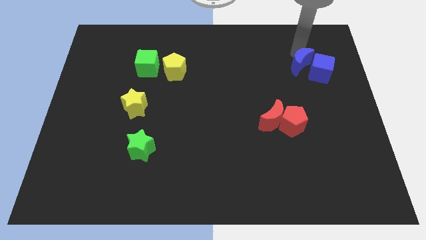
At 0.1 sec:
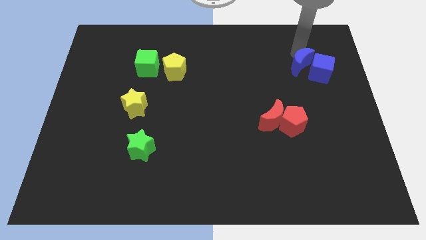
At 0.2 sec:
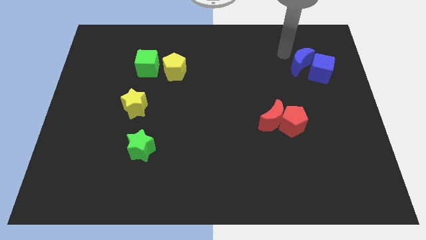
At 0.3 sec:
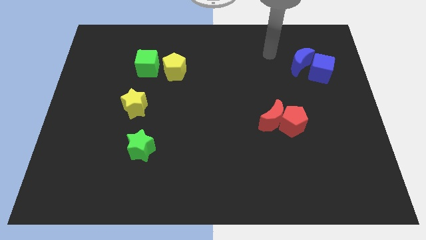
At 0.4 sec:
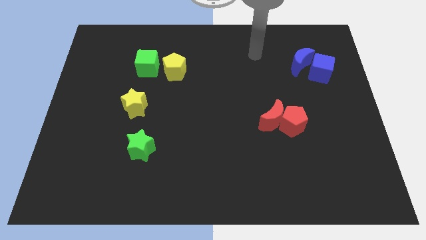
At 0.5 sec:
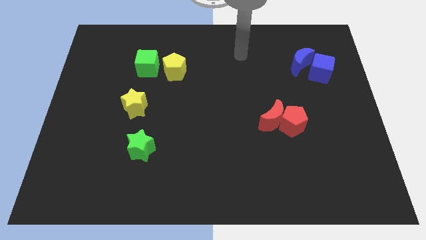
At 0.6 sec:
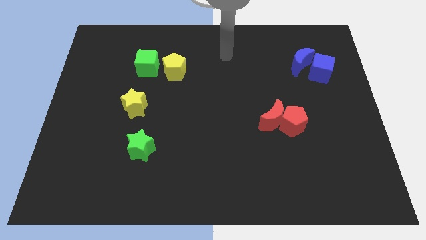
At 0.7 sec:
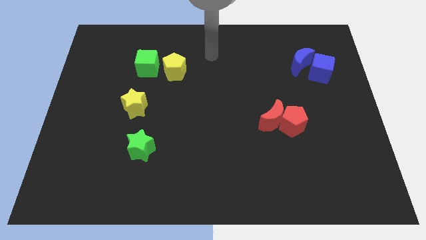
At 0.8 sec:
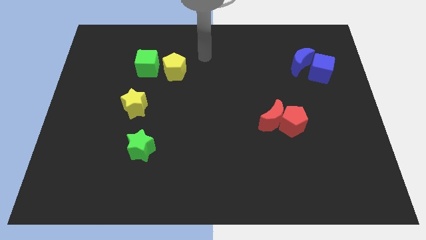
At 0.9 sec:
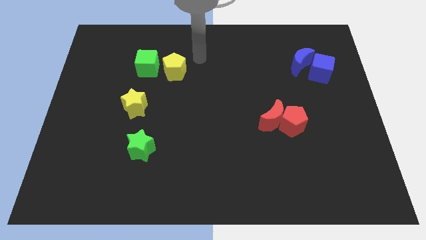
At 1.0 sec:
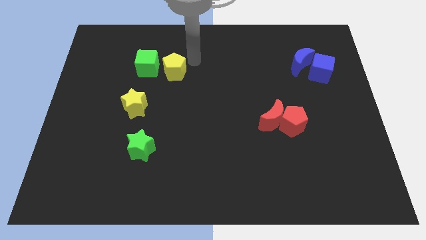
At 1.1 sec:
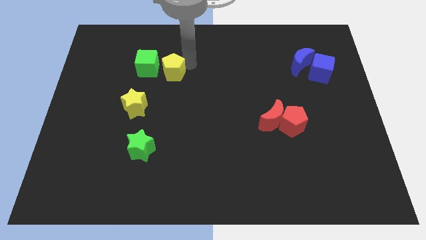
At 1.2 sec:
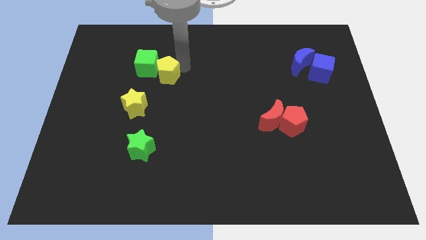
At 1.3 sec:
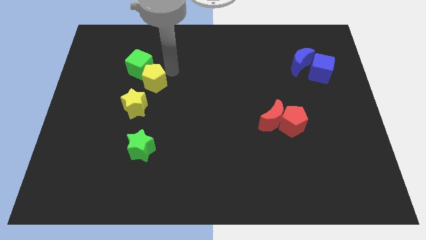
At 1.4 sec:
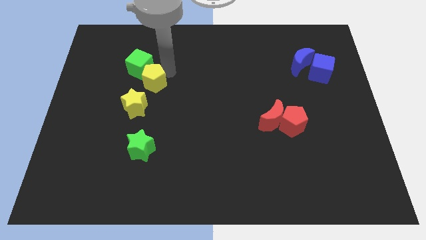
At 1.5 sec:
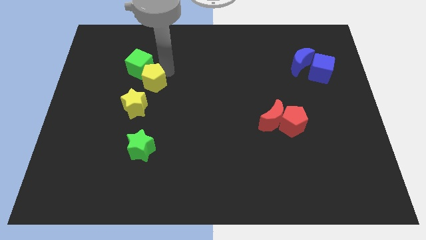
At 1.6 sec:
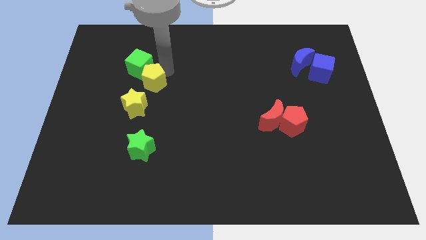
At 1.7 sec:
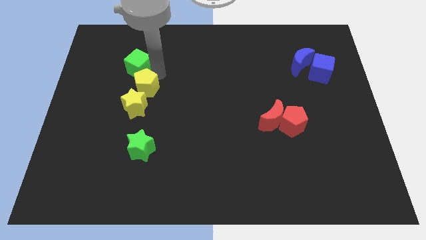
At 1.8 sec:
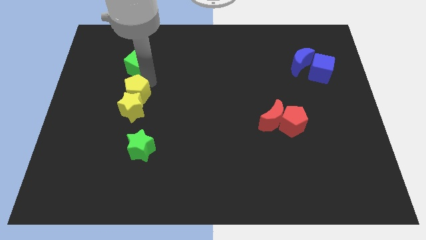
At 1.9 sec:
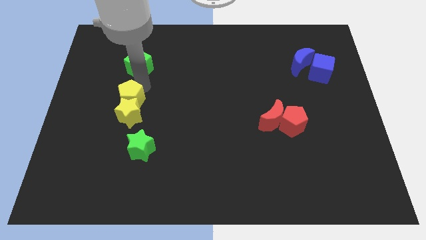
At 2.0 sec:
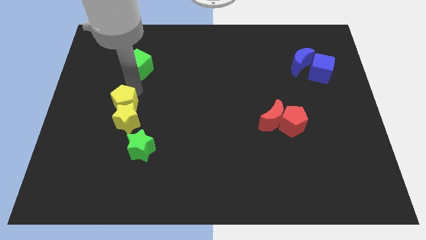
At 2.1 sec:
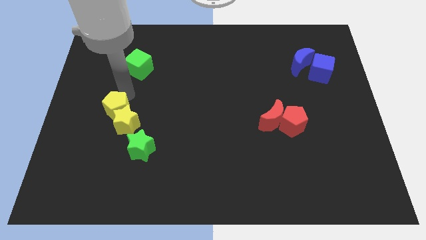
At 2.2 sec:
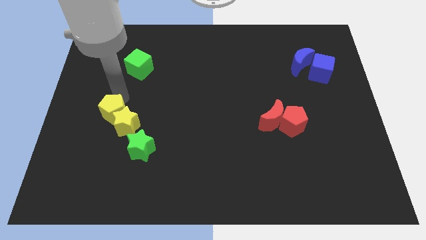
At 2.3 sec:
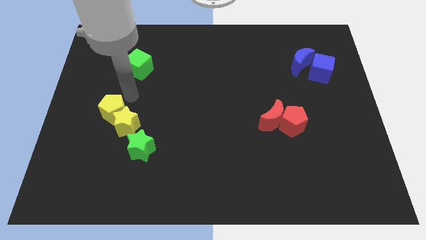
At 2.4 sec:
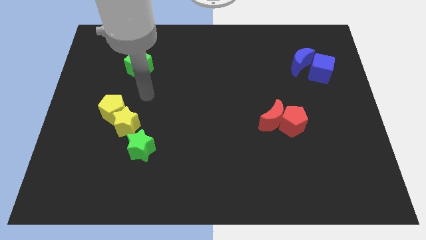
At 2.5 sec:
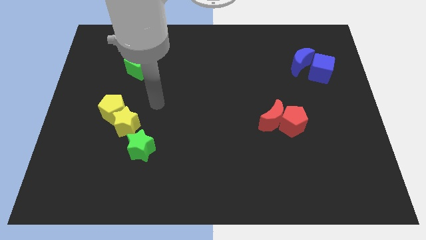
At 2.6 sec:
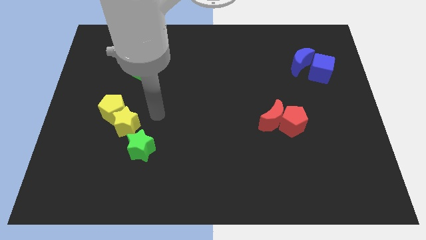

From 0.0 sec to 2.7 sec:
push yellow pentagon into the yellow star

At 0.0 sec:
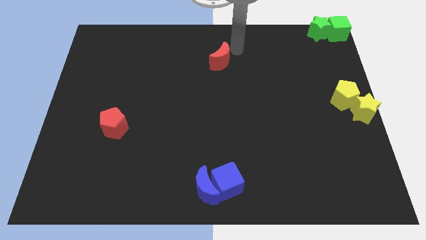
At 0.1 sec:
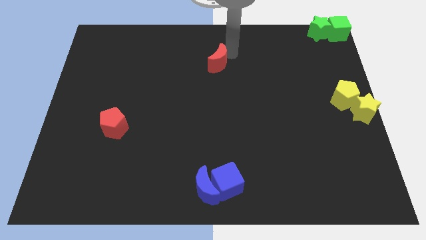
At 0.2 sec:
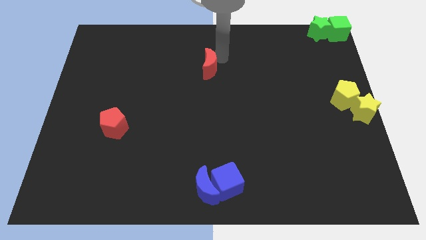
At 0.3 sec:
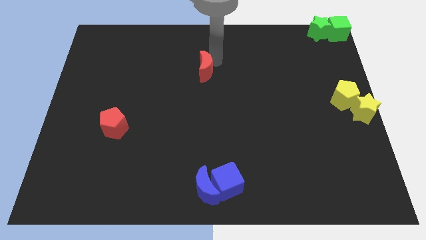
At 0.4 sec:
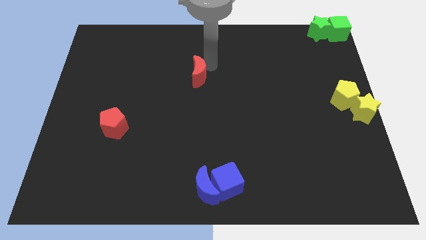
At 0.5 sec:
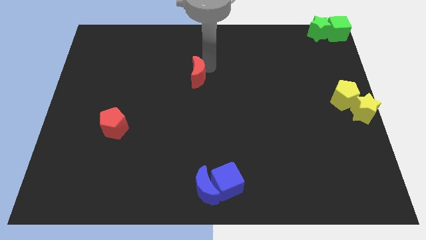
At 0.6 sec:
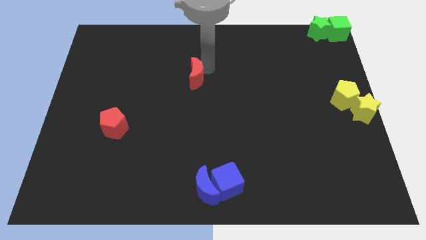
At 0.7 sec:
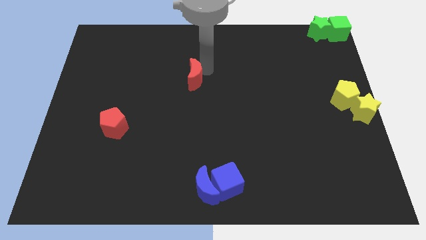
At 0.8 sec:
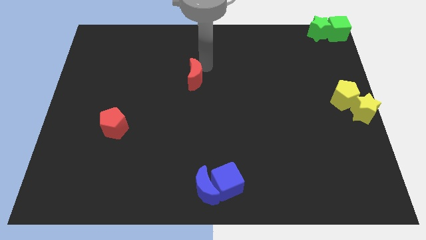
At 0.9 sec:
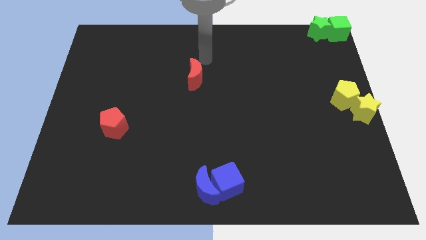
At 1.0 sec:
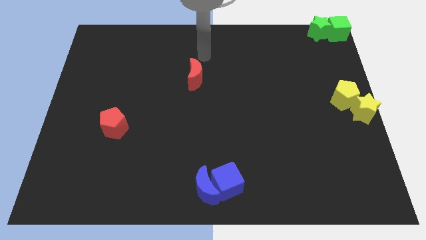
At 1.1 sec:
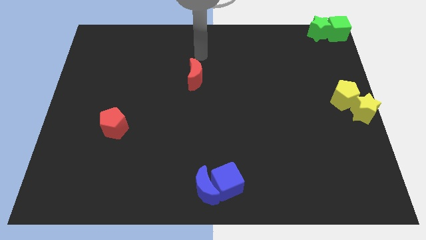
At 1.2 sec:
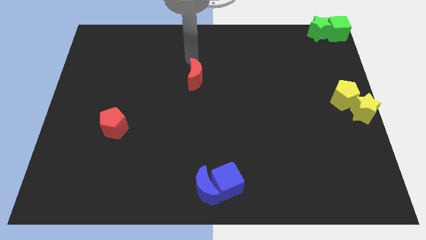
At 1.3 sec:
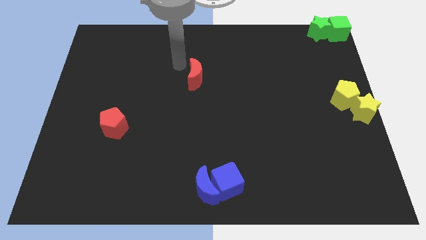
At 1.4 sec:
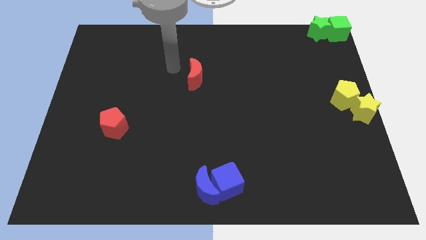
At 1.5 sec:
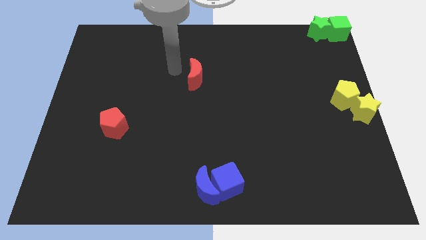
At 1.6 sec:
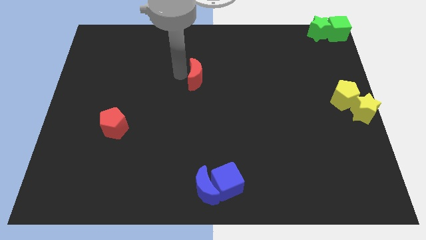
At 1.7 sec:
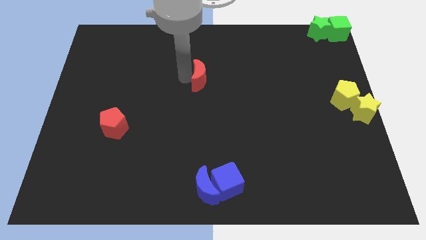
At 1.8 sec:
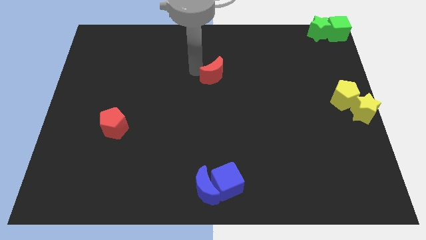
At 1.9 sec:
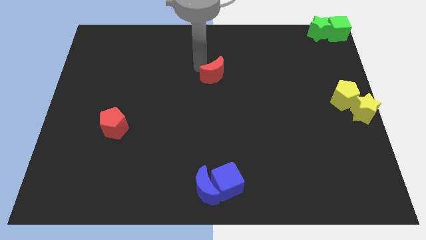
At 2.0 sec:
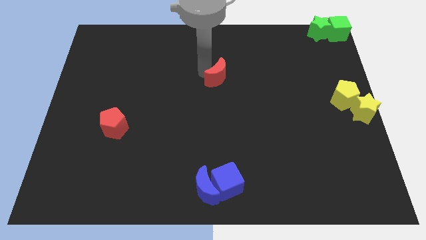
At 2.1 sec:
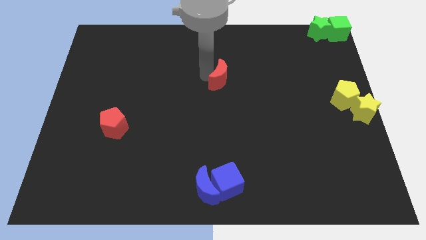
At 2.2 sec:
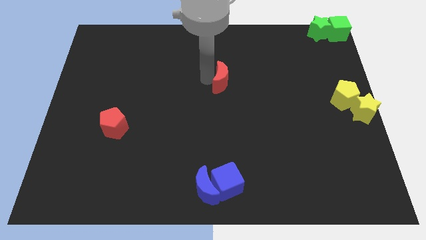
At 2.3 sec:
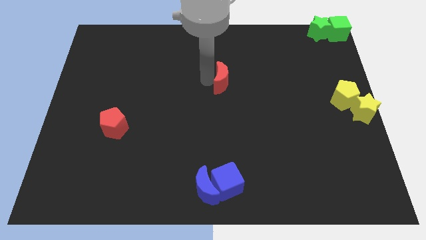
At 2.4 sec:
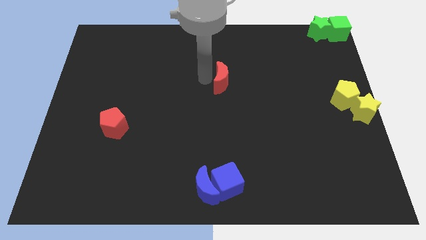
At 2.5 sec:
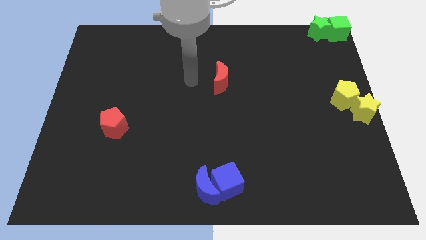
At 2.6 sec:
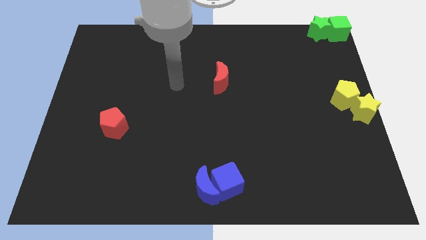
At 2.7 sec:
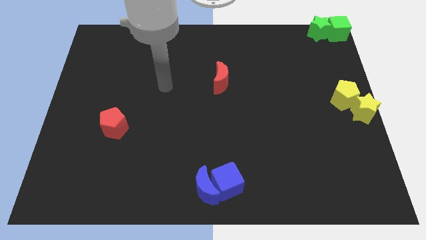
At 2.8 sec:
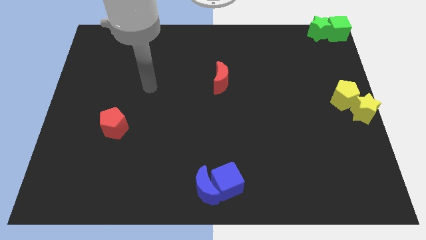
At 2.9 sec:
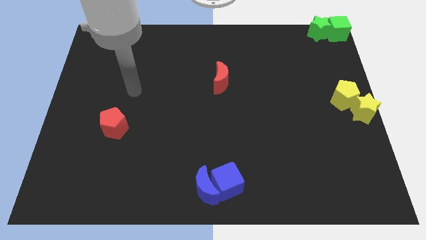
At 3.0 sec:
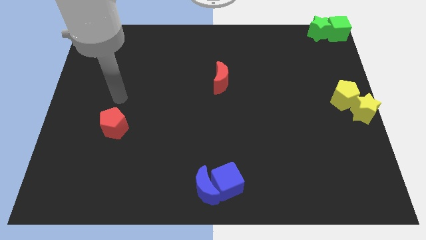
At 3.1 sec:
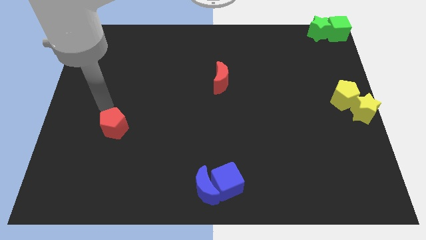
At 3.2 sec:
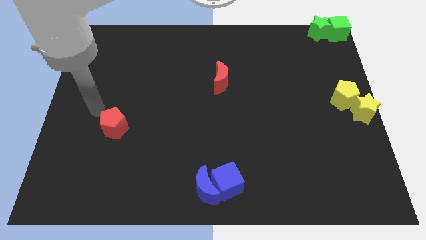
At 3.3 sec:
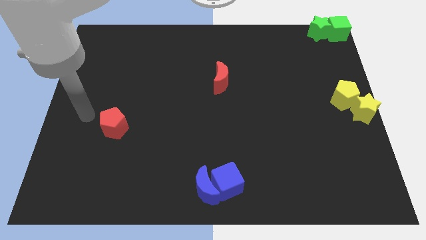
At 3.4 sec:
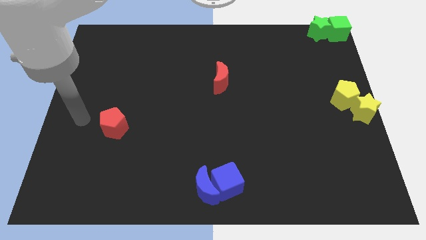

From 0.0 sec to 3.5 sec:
place the red crescent vertically towards blue cube

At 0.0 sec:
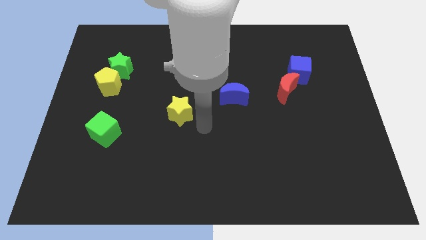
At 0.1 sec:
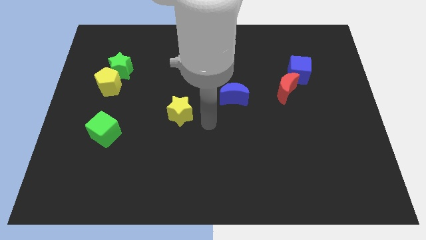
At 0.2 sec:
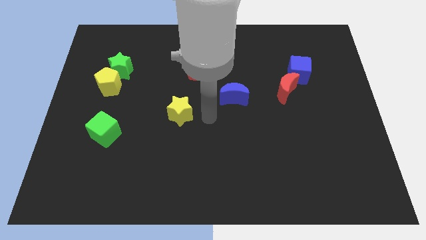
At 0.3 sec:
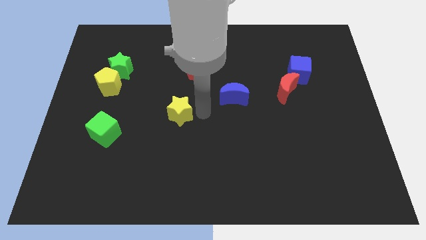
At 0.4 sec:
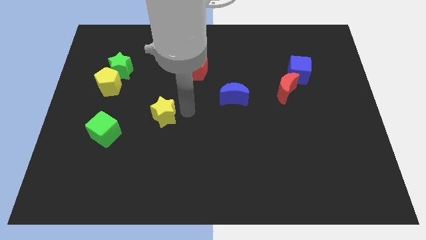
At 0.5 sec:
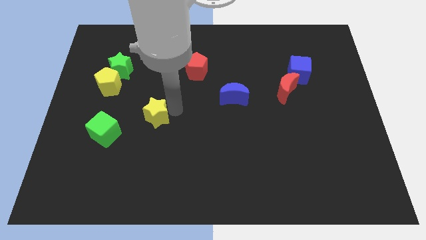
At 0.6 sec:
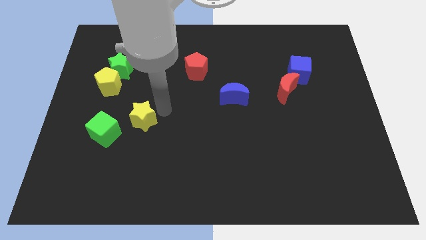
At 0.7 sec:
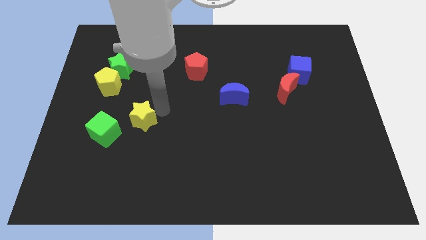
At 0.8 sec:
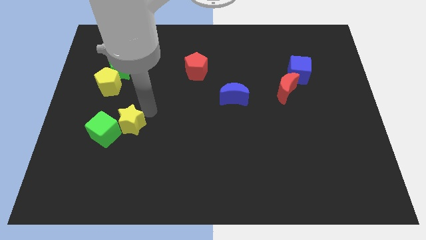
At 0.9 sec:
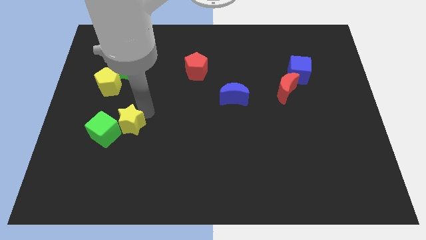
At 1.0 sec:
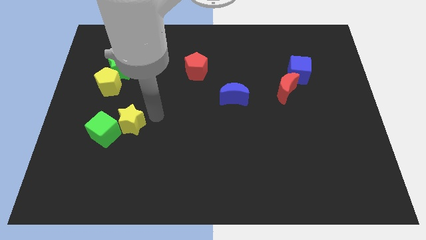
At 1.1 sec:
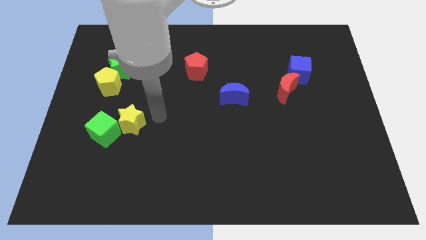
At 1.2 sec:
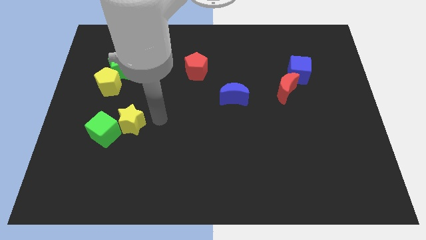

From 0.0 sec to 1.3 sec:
push yellow star near green cube

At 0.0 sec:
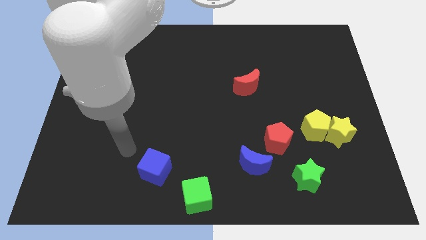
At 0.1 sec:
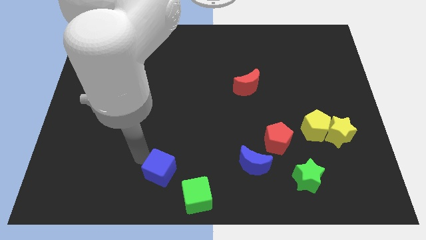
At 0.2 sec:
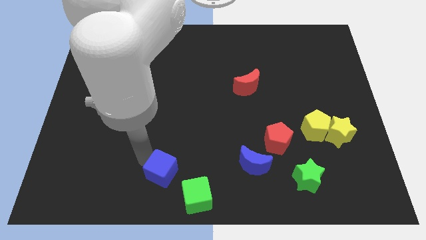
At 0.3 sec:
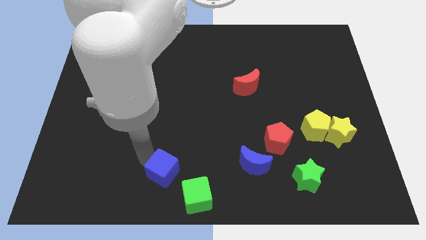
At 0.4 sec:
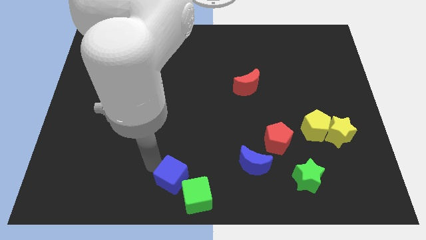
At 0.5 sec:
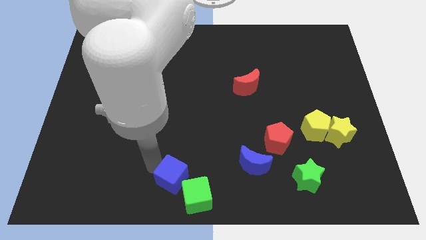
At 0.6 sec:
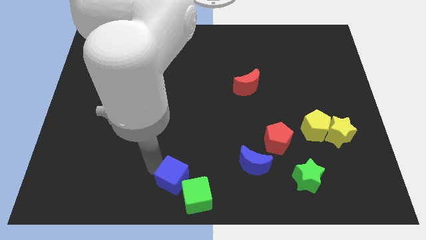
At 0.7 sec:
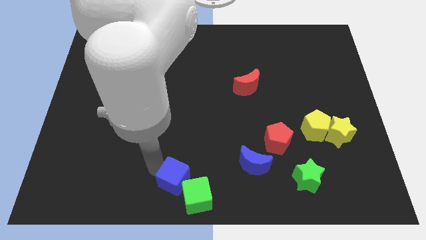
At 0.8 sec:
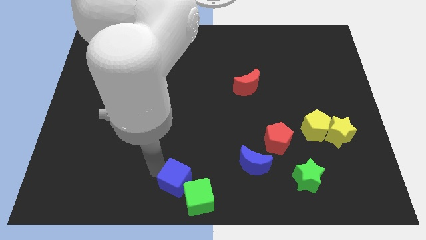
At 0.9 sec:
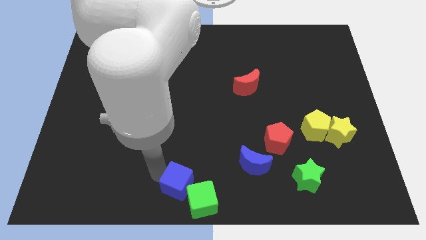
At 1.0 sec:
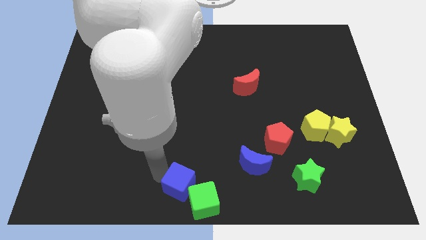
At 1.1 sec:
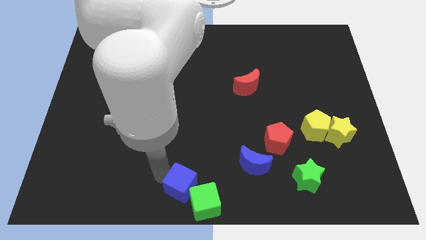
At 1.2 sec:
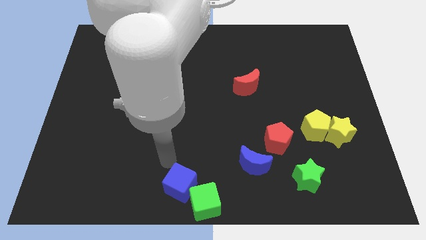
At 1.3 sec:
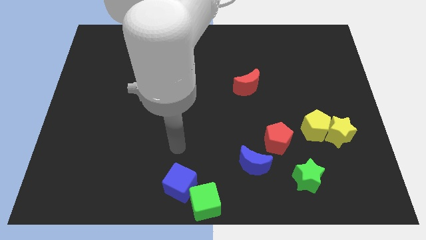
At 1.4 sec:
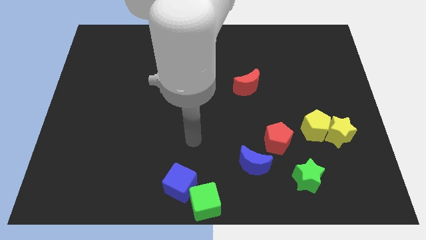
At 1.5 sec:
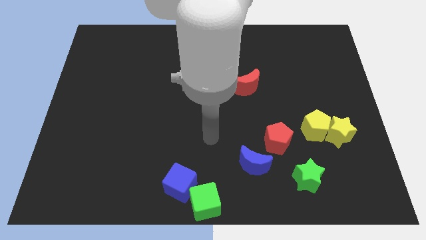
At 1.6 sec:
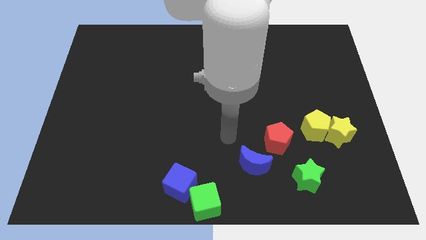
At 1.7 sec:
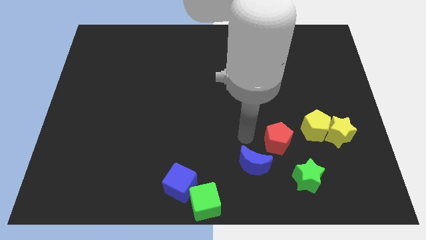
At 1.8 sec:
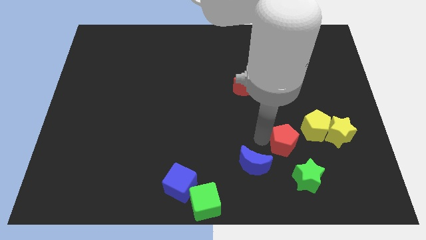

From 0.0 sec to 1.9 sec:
push the blue cube into the green cube
